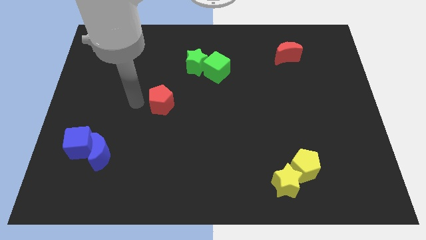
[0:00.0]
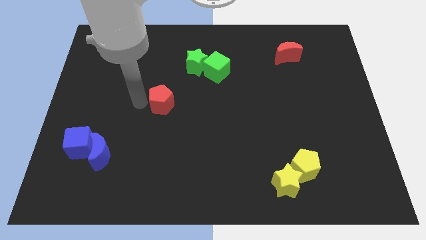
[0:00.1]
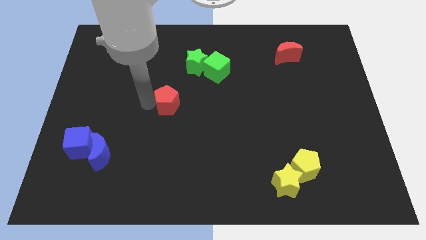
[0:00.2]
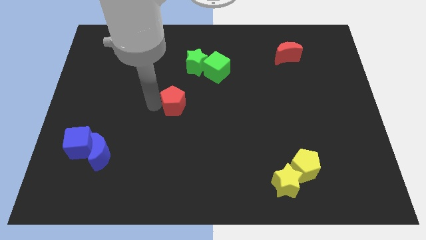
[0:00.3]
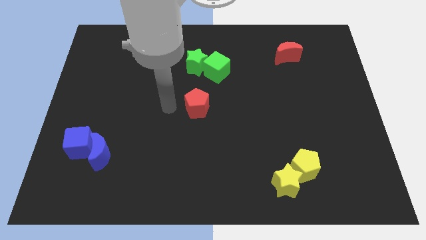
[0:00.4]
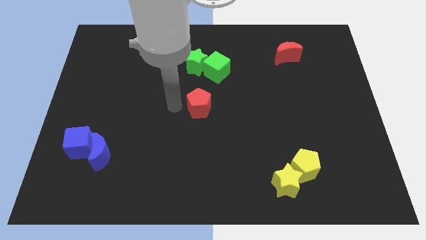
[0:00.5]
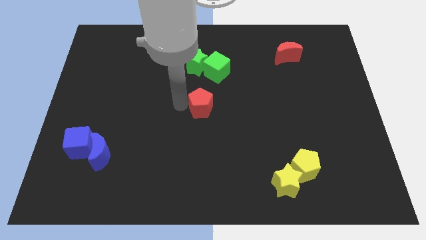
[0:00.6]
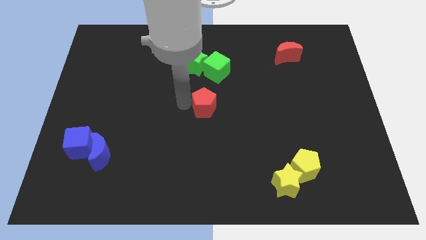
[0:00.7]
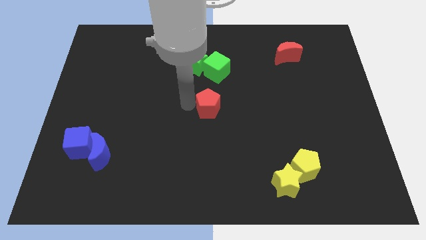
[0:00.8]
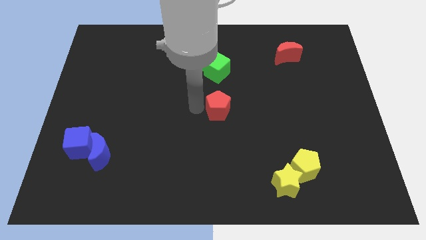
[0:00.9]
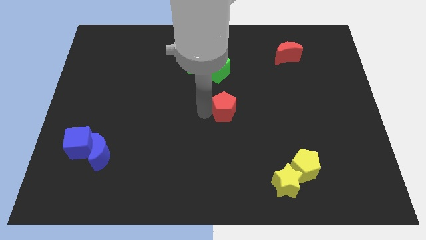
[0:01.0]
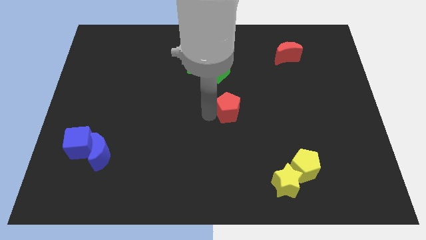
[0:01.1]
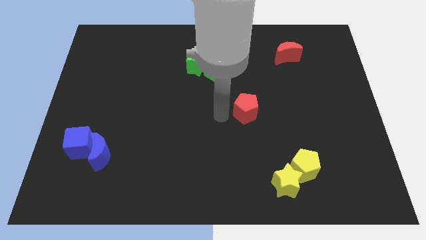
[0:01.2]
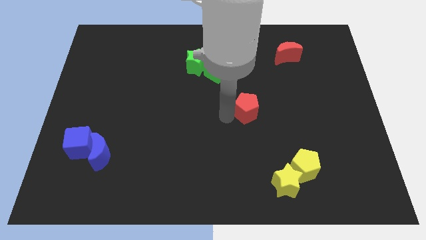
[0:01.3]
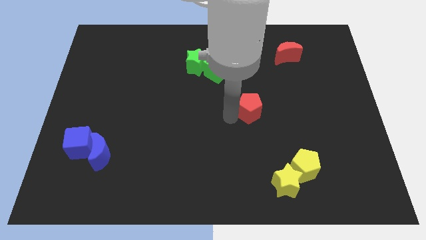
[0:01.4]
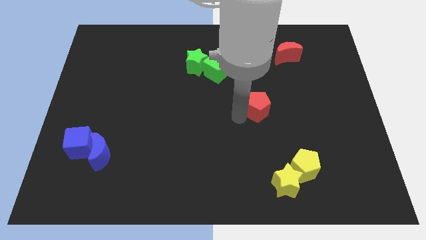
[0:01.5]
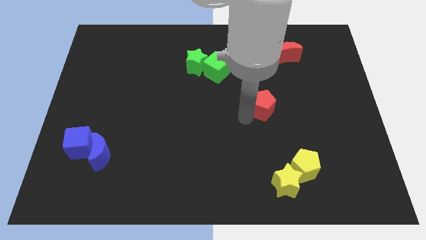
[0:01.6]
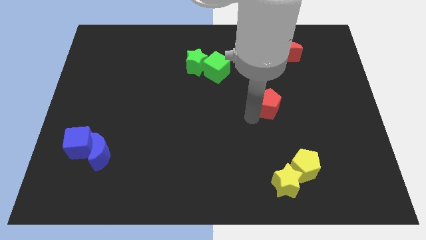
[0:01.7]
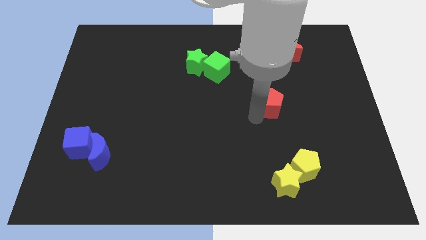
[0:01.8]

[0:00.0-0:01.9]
push the red pentagon to the right of the board

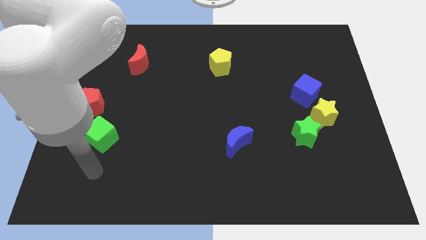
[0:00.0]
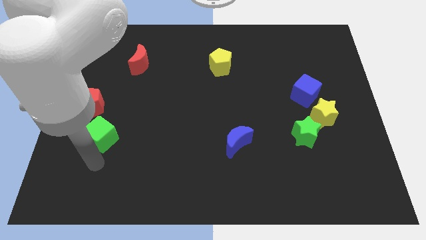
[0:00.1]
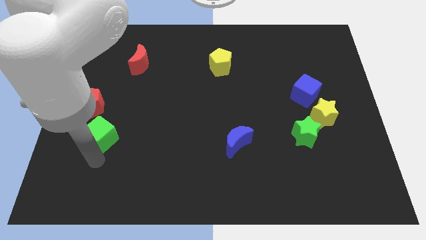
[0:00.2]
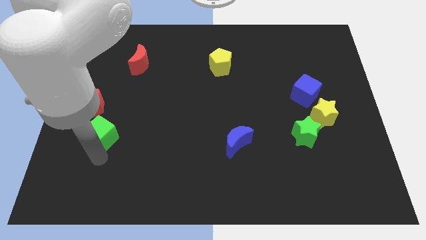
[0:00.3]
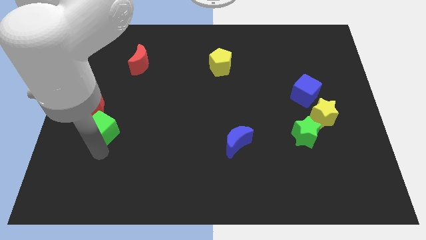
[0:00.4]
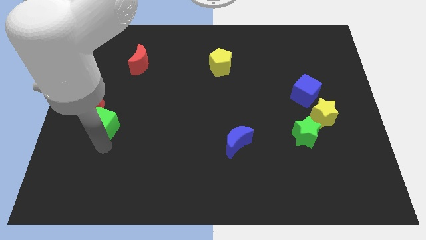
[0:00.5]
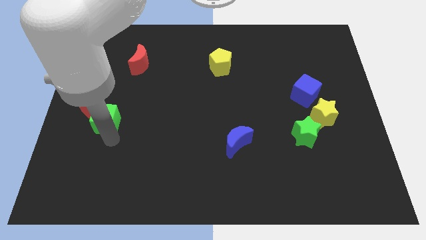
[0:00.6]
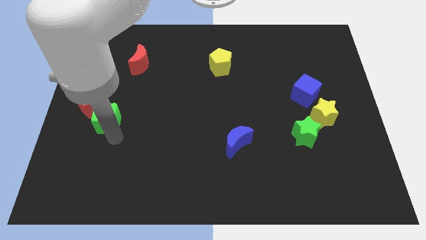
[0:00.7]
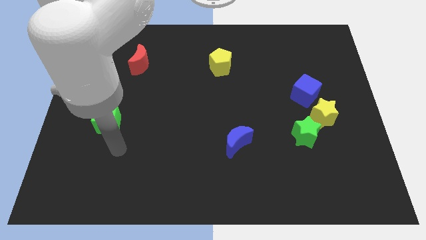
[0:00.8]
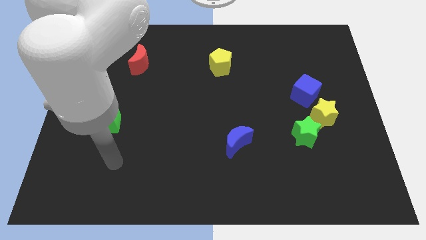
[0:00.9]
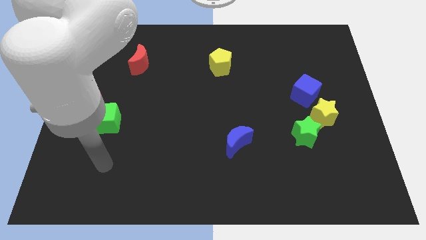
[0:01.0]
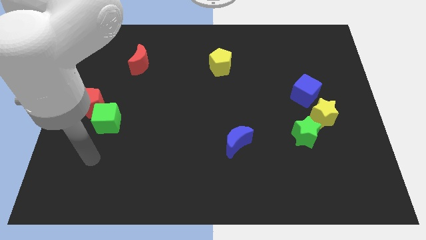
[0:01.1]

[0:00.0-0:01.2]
move green cube into the red pentagon

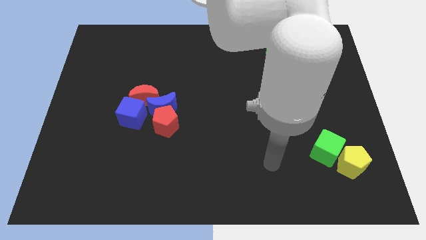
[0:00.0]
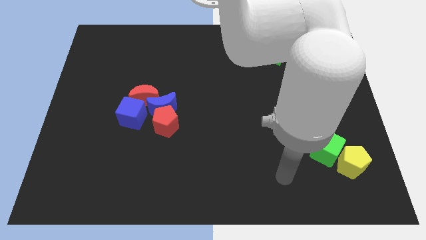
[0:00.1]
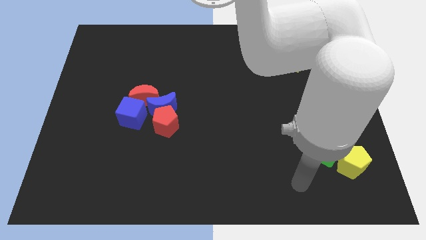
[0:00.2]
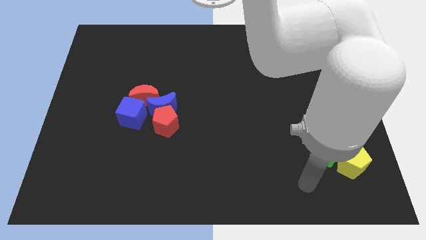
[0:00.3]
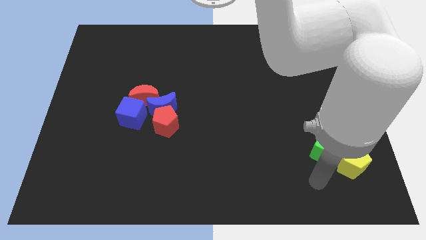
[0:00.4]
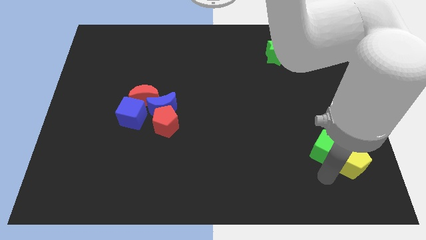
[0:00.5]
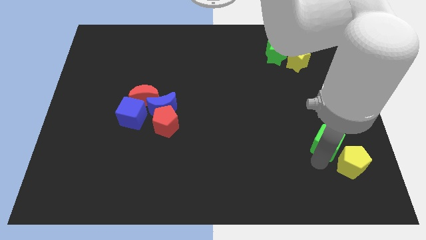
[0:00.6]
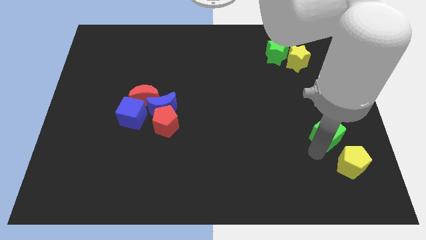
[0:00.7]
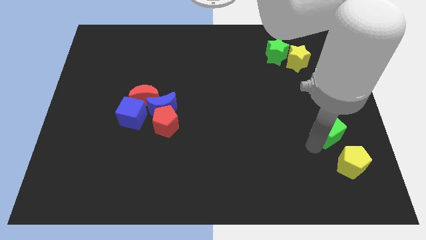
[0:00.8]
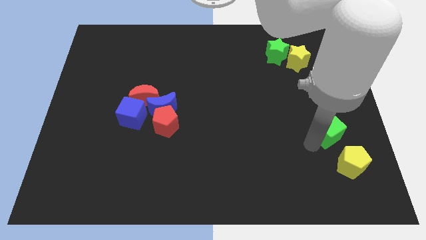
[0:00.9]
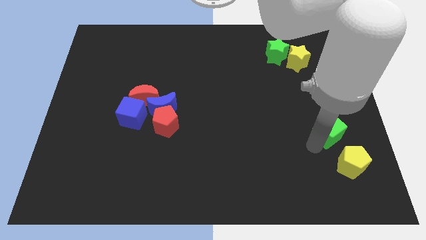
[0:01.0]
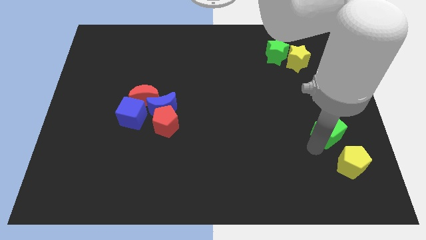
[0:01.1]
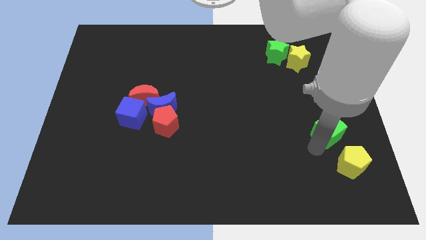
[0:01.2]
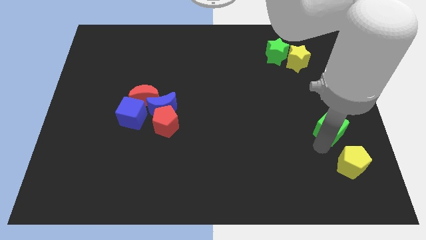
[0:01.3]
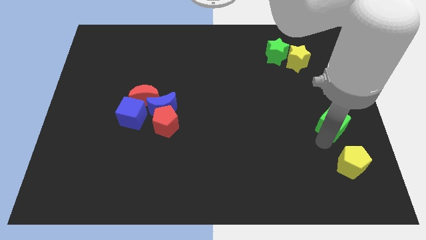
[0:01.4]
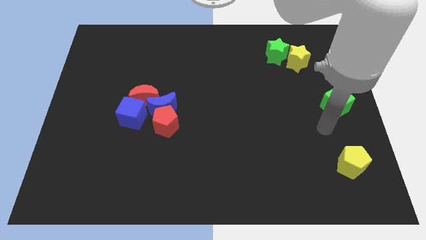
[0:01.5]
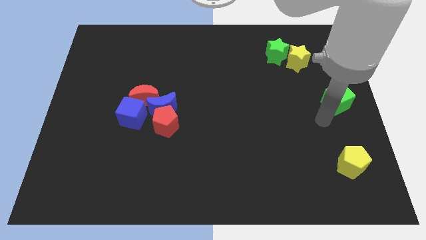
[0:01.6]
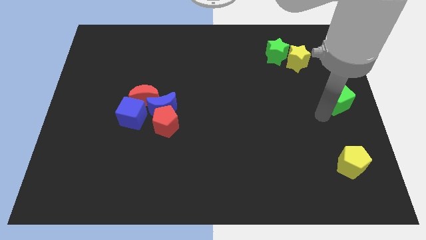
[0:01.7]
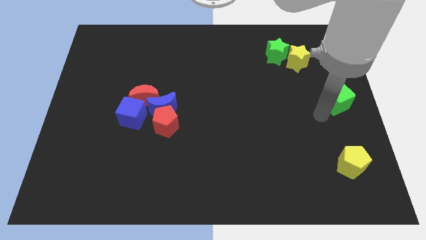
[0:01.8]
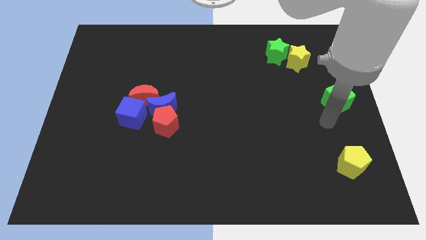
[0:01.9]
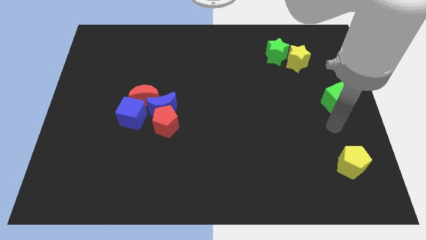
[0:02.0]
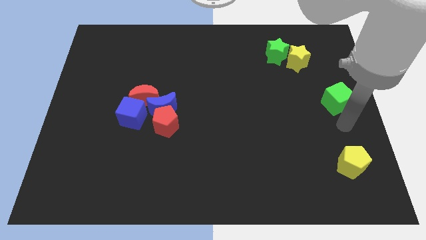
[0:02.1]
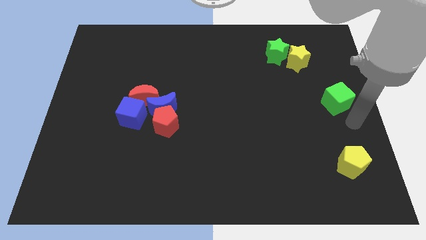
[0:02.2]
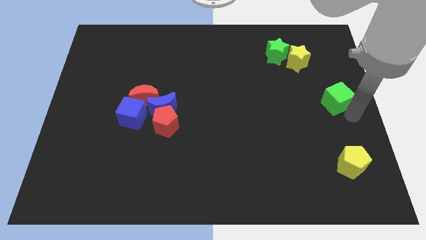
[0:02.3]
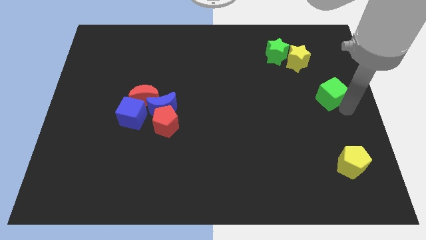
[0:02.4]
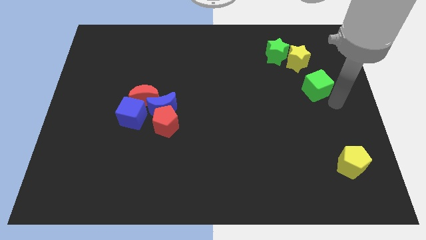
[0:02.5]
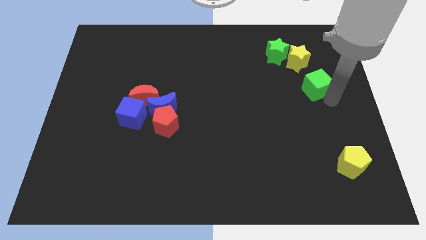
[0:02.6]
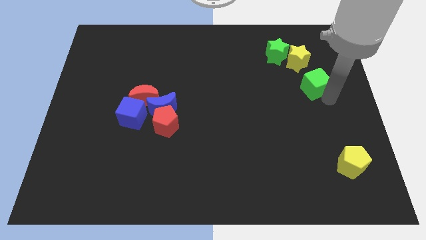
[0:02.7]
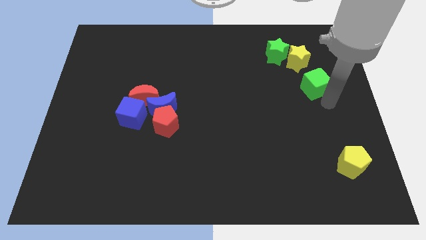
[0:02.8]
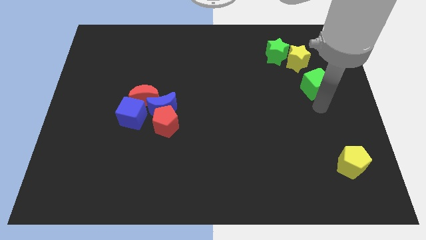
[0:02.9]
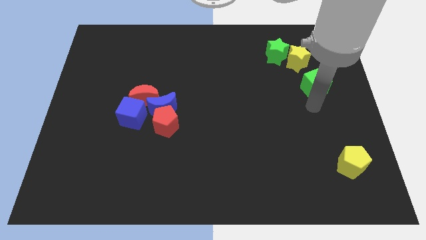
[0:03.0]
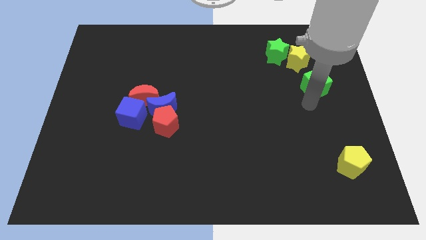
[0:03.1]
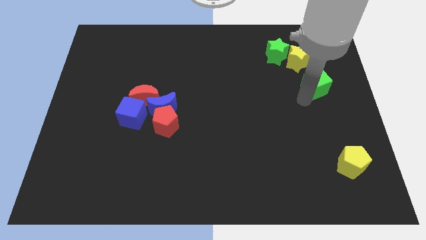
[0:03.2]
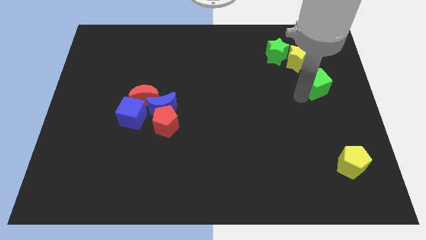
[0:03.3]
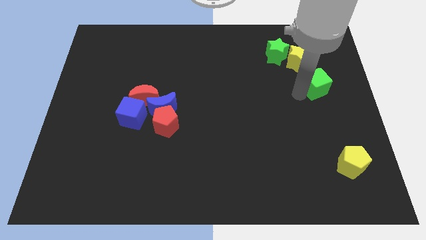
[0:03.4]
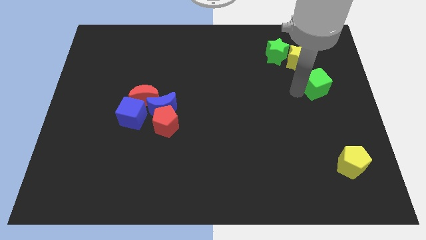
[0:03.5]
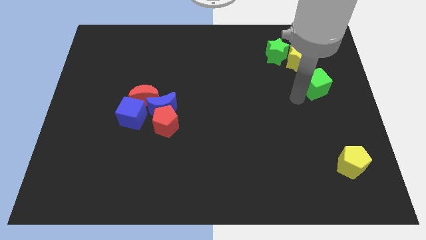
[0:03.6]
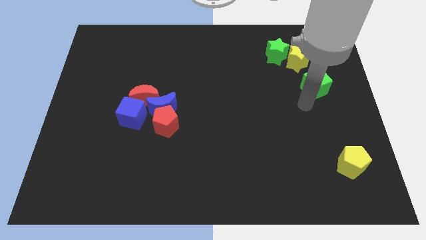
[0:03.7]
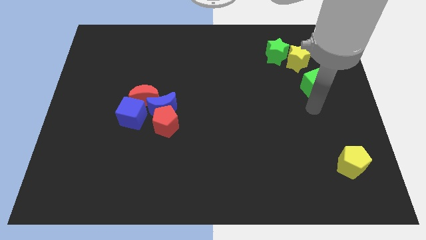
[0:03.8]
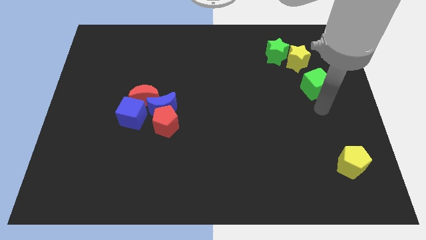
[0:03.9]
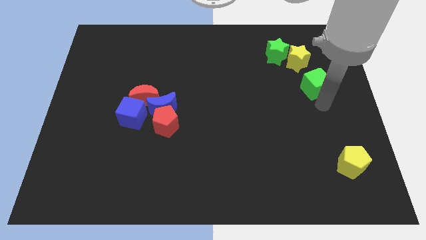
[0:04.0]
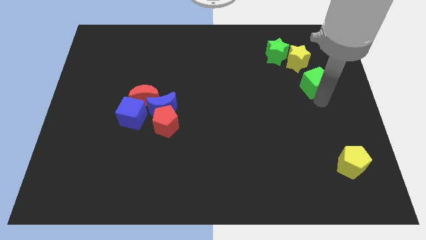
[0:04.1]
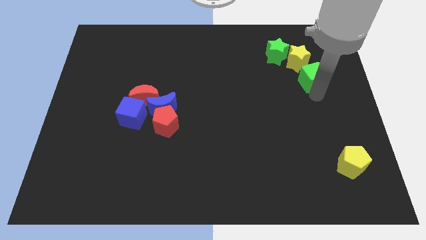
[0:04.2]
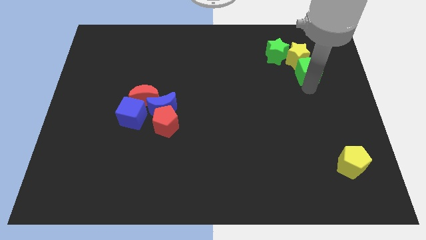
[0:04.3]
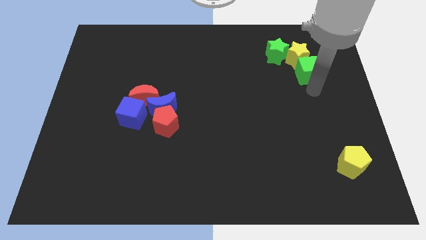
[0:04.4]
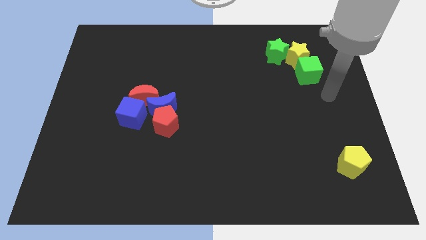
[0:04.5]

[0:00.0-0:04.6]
move the green cube towards the yellow star

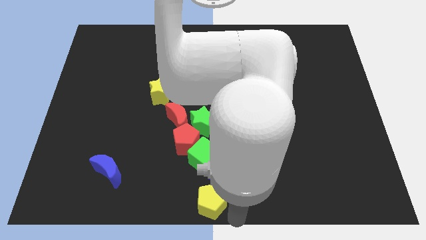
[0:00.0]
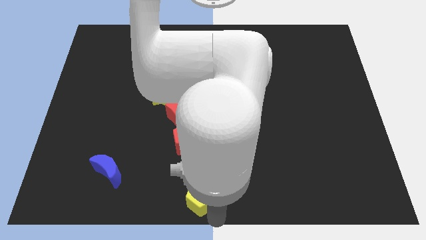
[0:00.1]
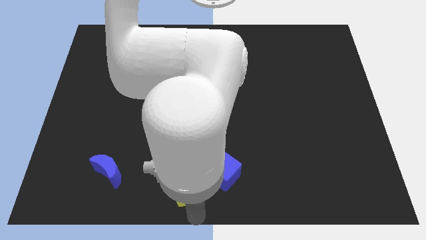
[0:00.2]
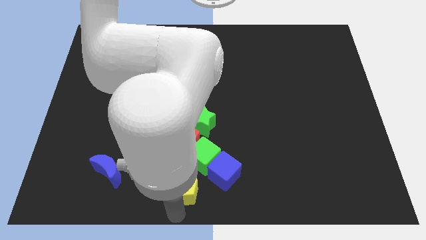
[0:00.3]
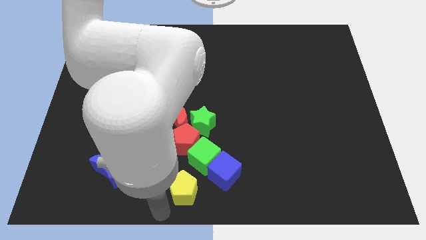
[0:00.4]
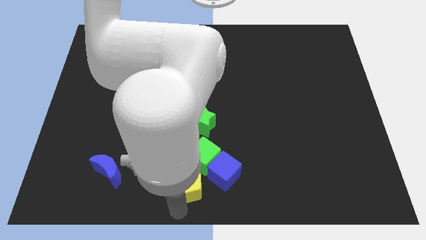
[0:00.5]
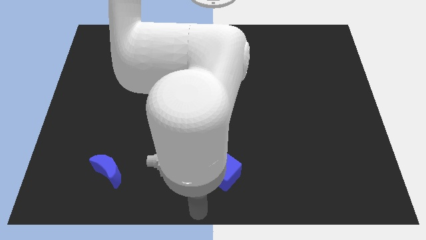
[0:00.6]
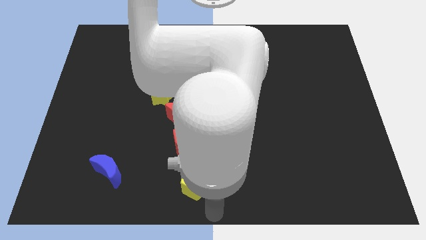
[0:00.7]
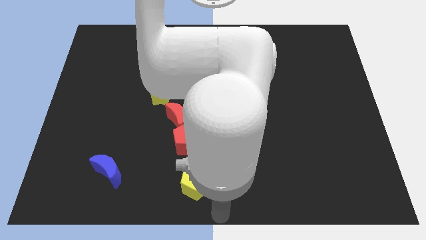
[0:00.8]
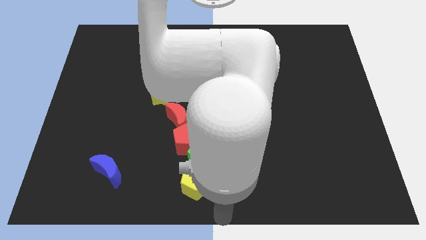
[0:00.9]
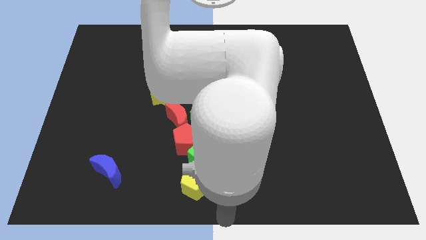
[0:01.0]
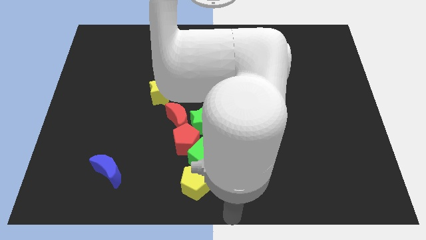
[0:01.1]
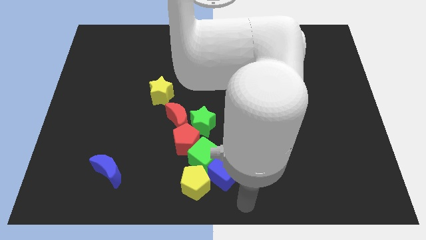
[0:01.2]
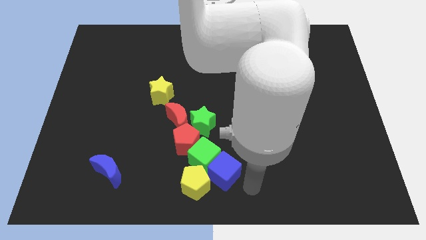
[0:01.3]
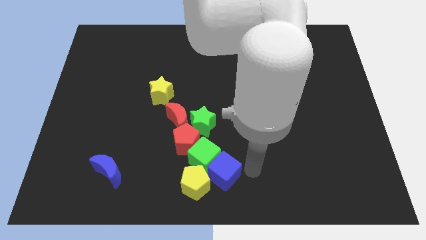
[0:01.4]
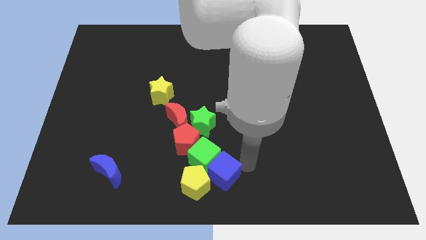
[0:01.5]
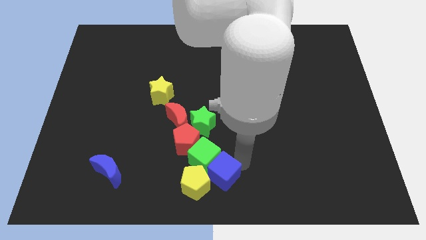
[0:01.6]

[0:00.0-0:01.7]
place yellow pentagon to the bottom of the green cube
